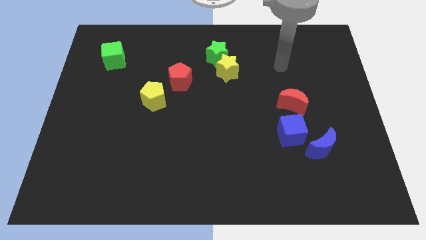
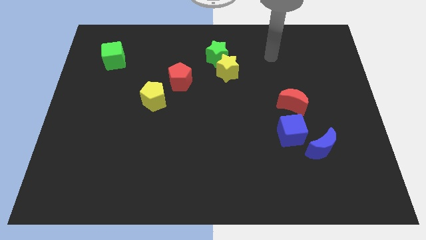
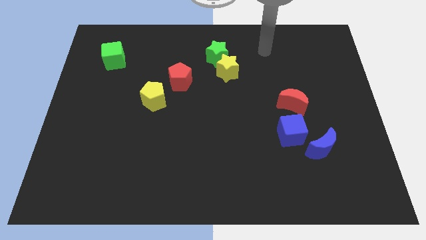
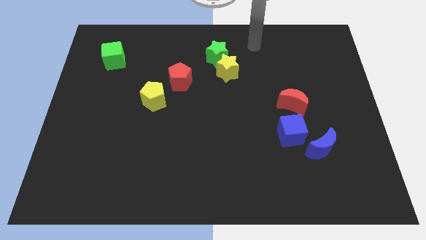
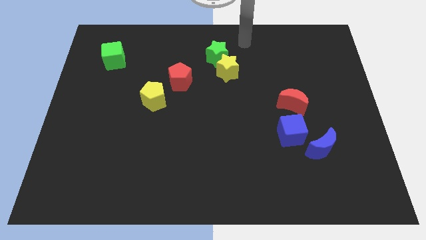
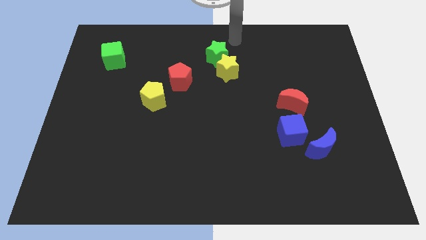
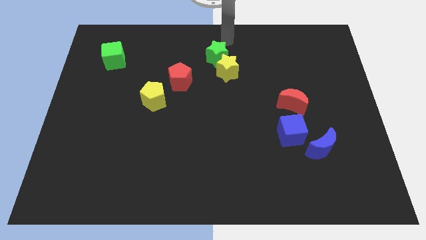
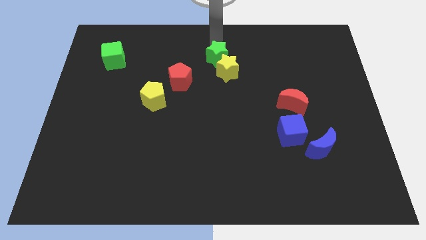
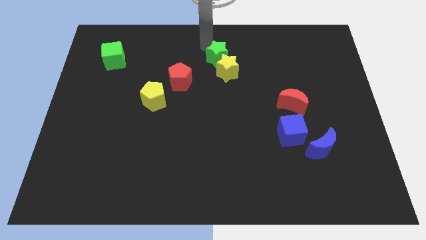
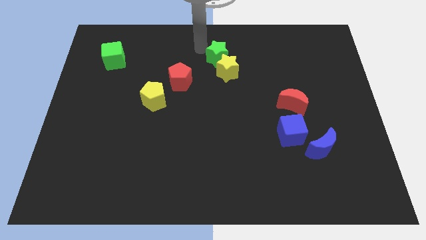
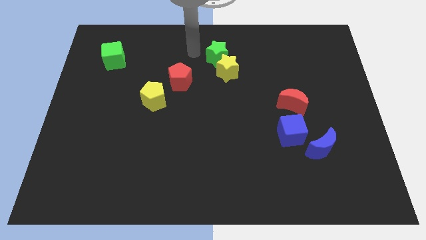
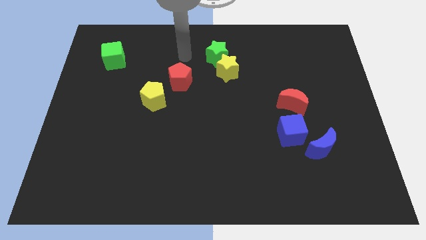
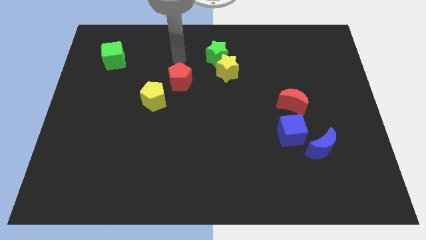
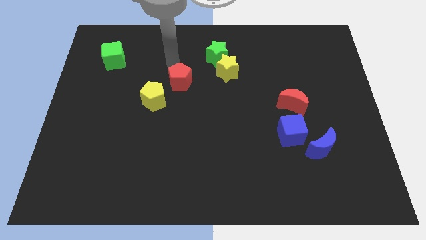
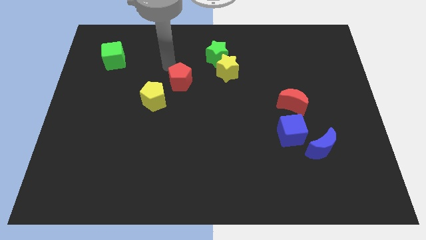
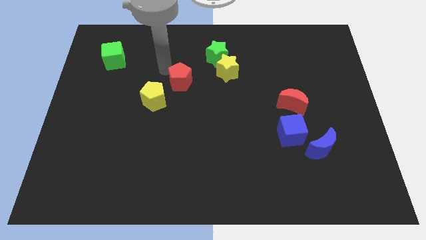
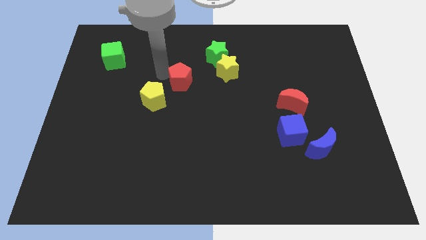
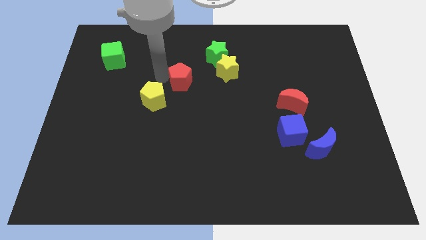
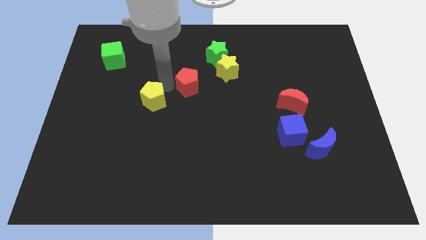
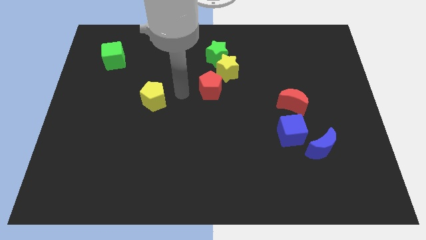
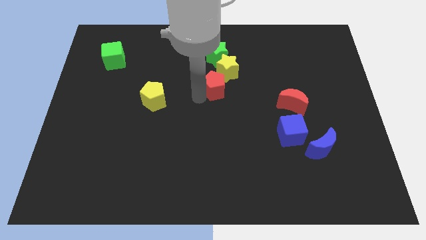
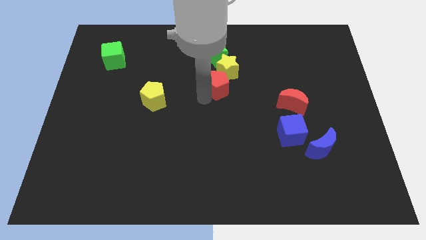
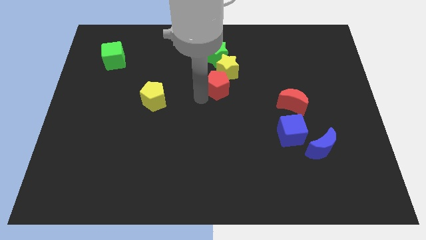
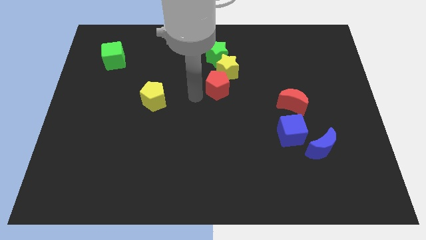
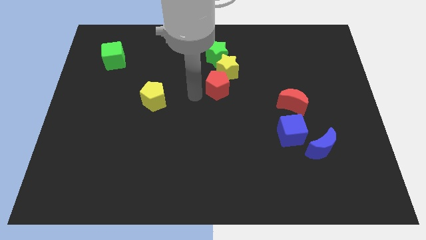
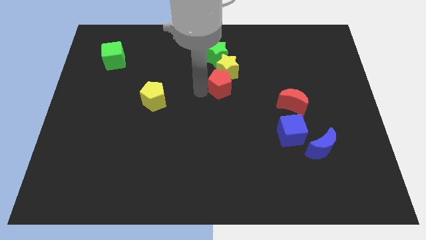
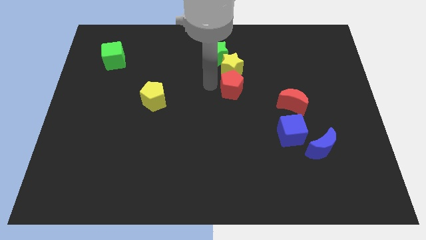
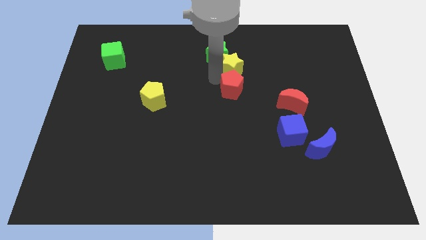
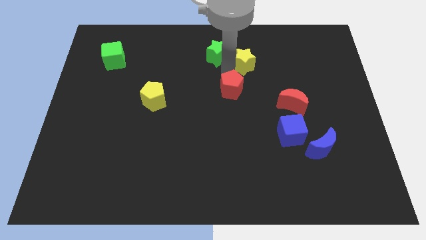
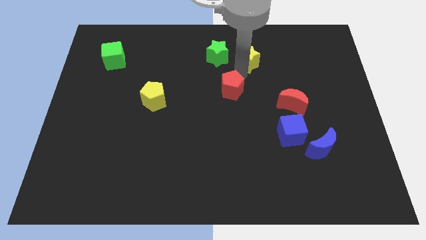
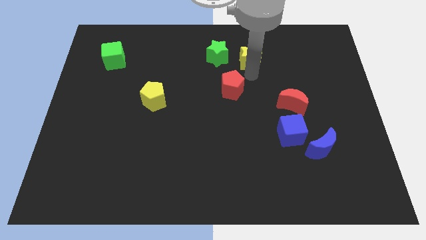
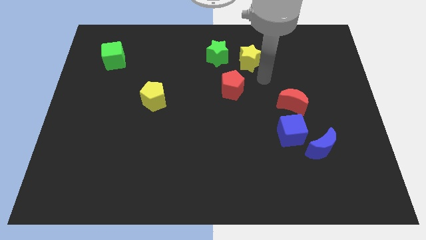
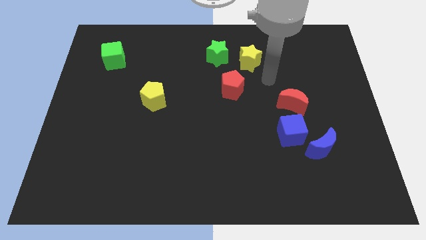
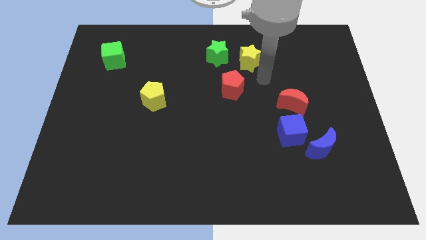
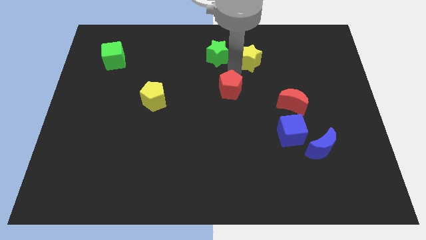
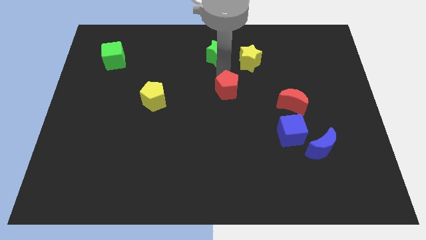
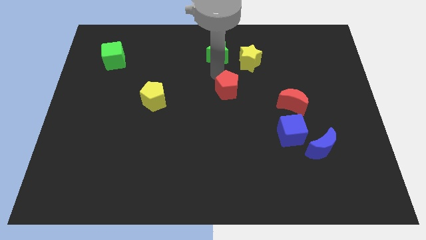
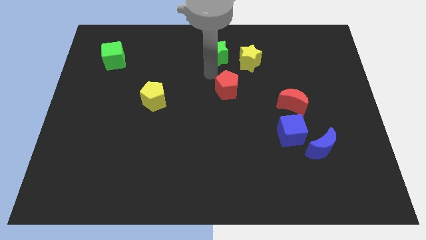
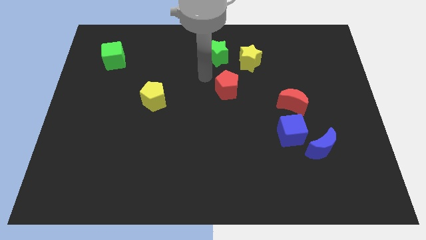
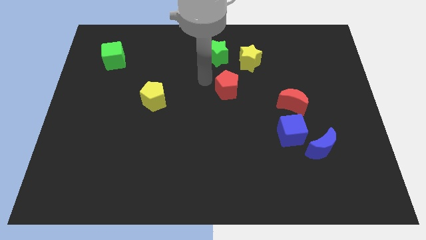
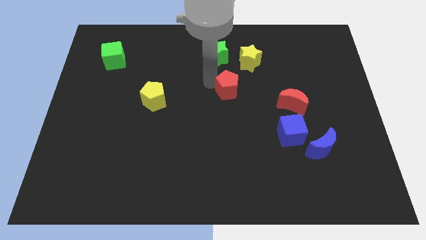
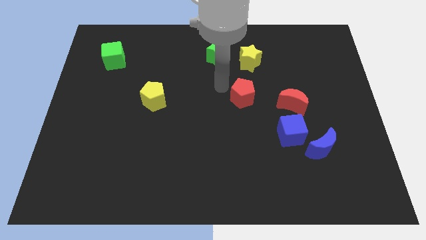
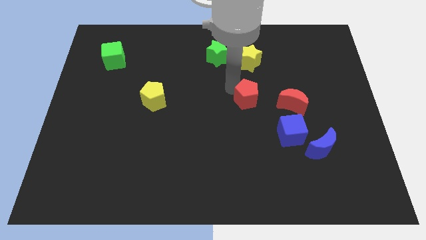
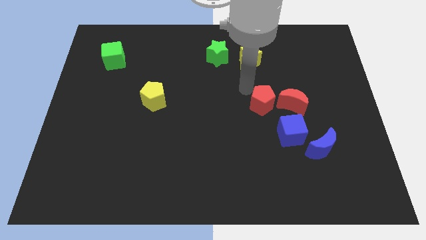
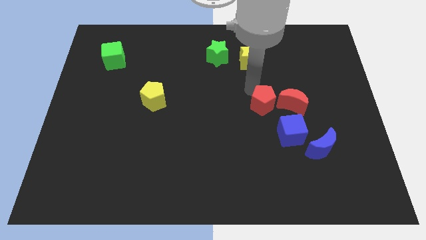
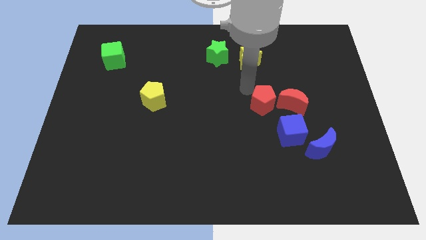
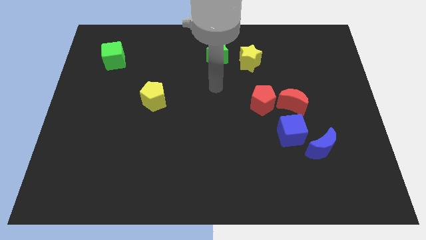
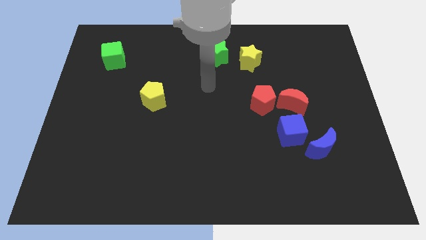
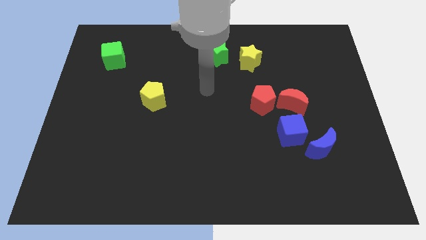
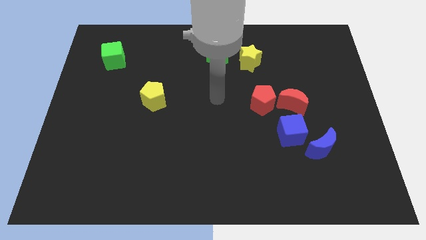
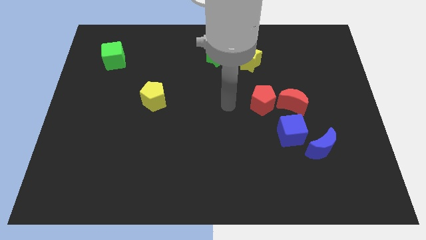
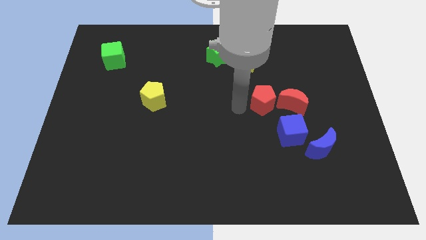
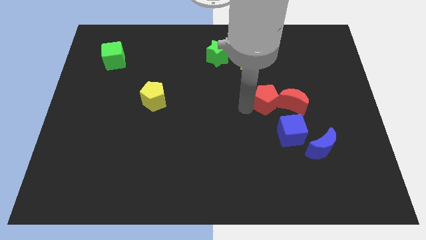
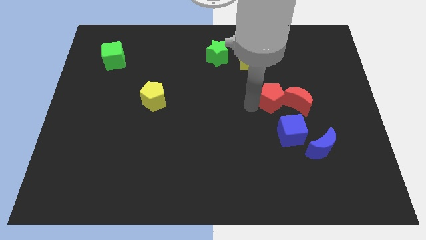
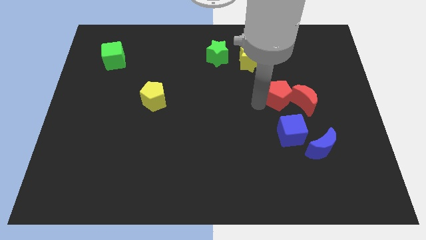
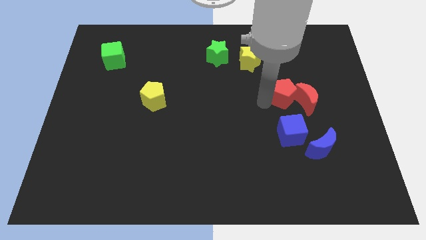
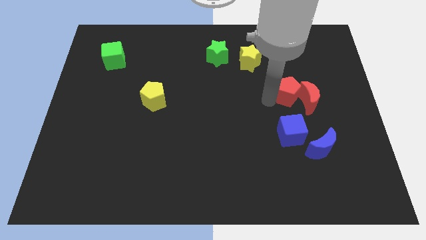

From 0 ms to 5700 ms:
move the red pentagon to the red moon

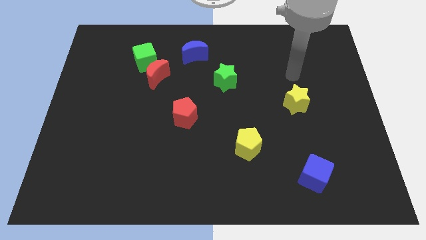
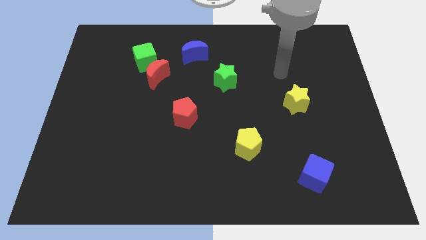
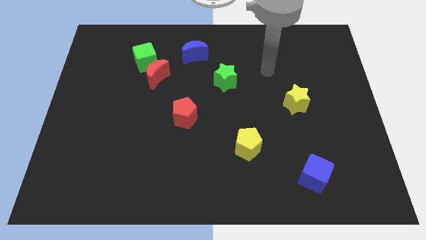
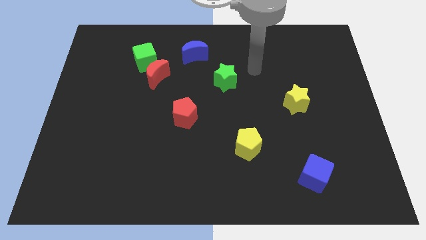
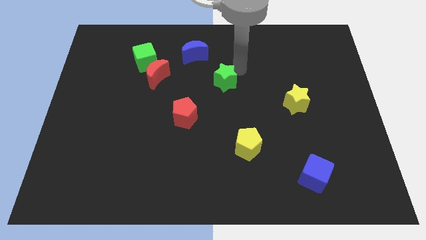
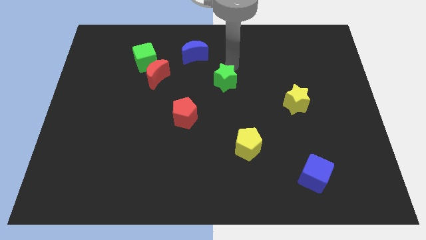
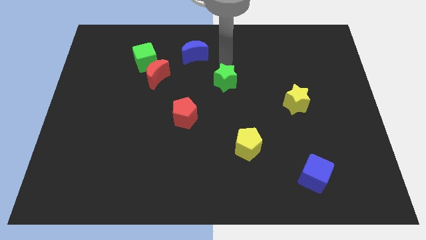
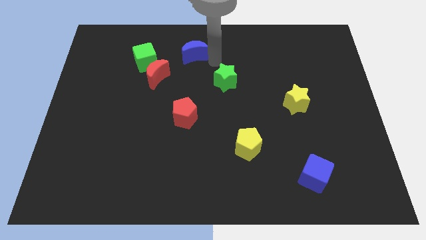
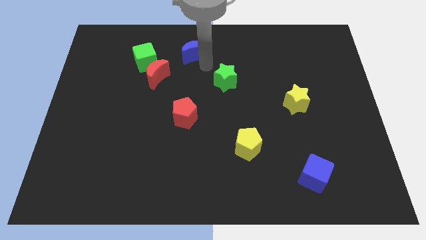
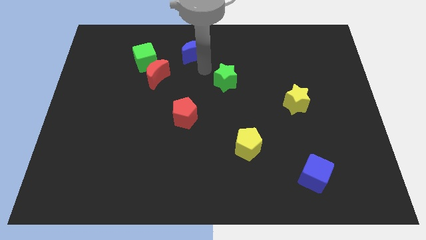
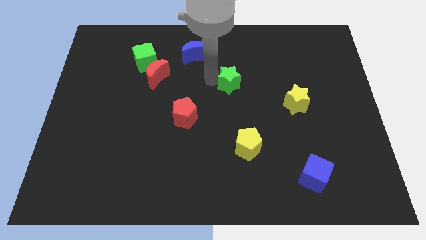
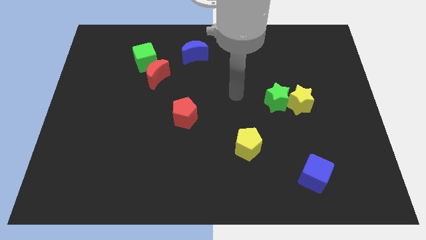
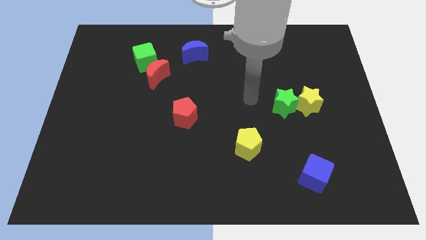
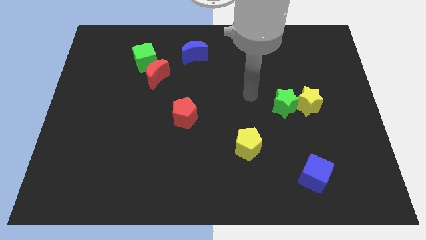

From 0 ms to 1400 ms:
push the green star close to the yellow star

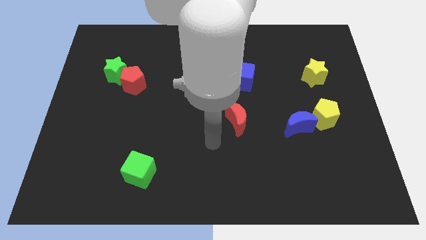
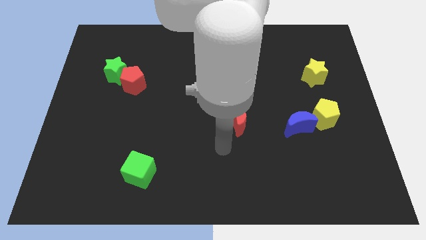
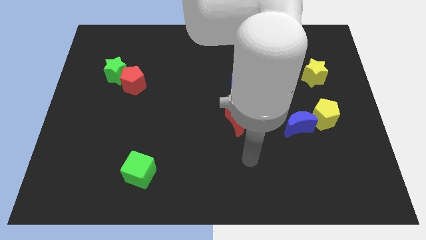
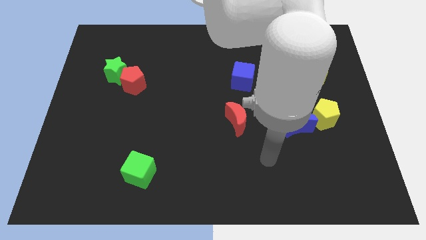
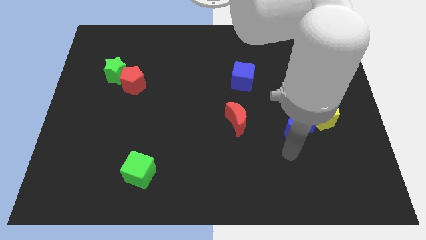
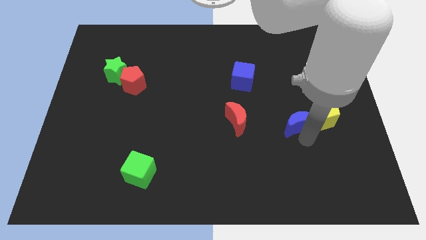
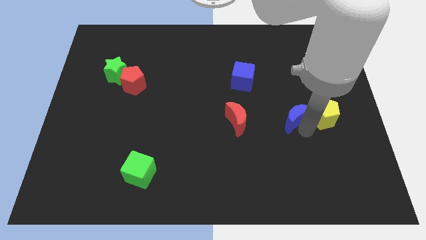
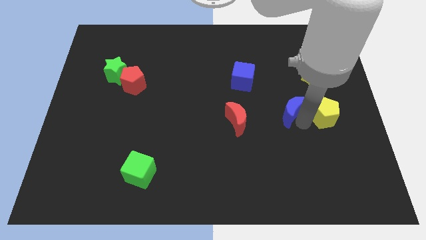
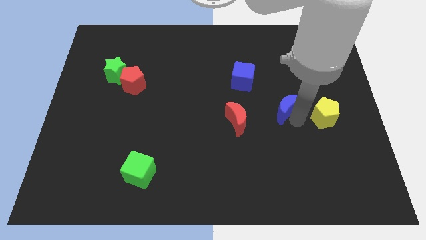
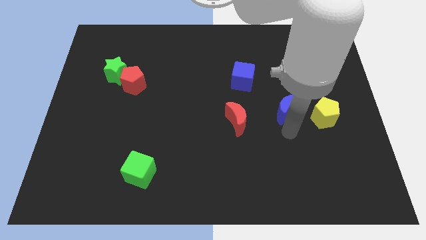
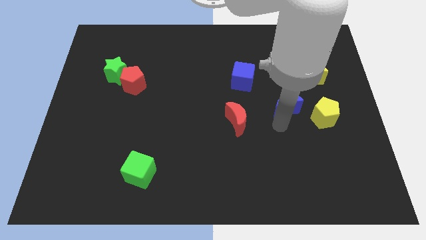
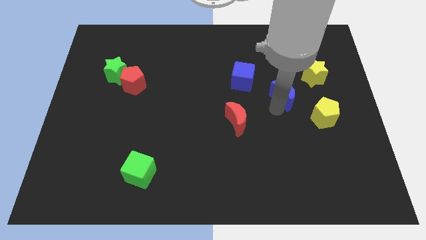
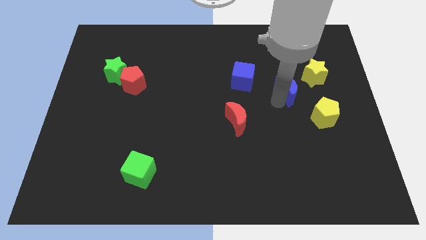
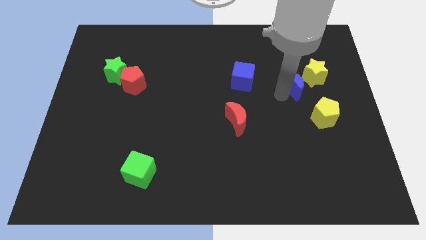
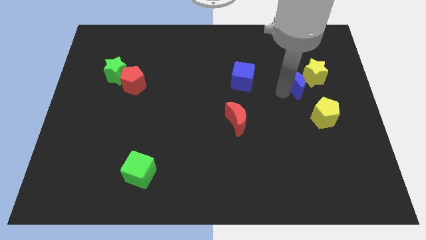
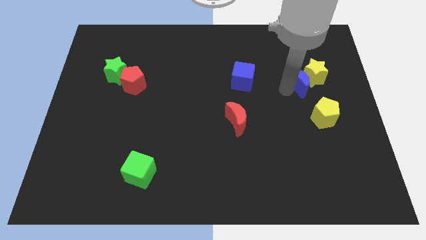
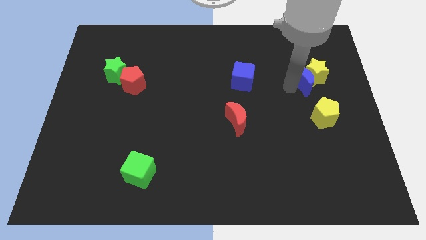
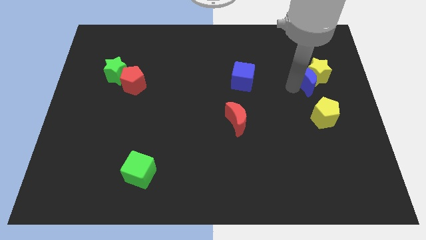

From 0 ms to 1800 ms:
put the blue moon to the yellow star
